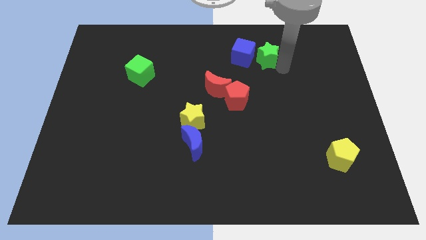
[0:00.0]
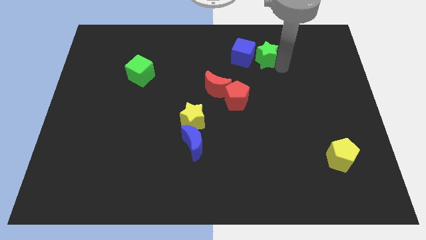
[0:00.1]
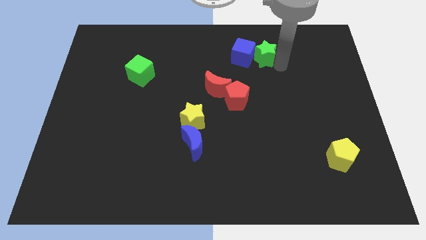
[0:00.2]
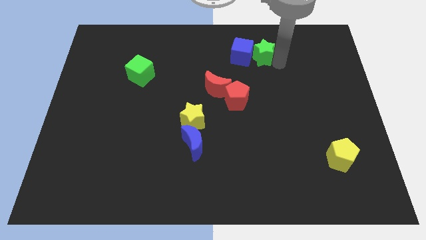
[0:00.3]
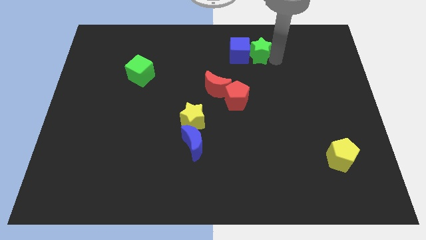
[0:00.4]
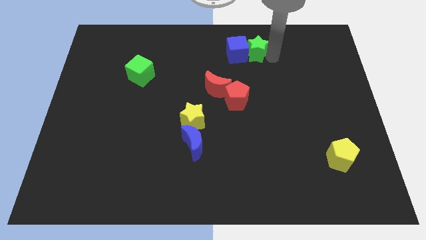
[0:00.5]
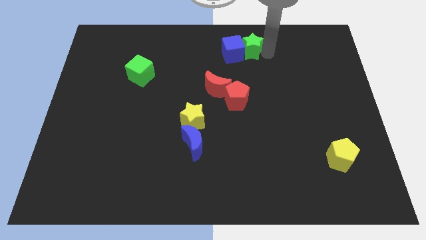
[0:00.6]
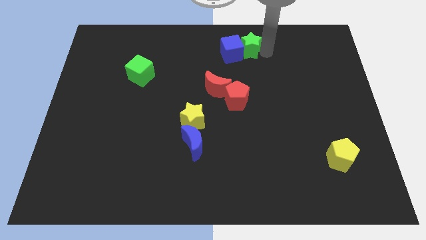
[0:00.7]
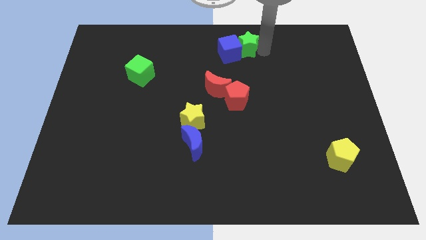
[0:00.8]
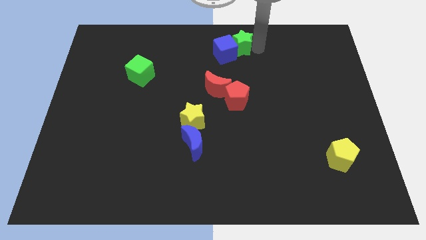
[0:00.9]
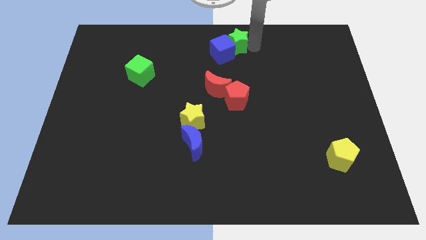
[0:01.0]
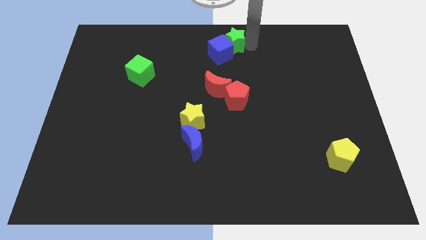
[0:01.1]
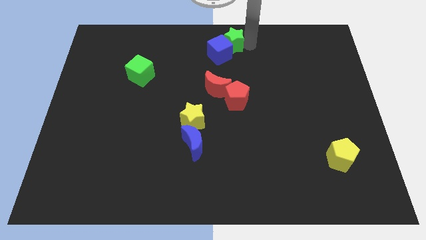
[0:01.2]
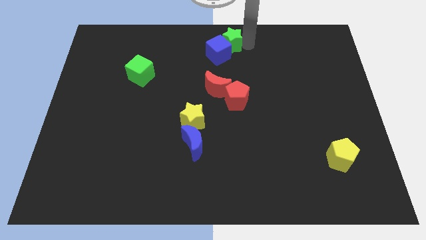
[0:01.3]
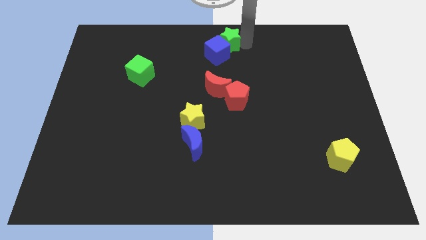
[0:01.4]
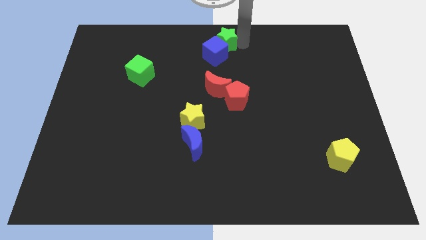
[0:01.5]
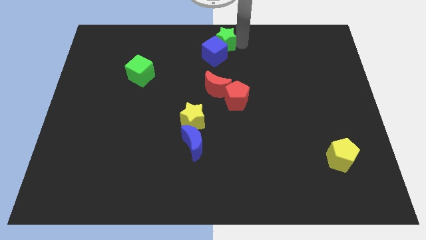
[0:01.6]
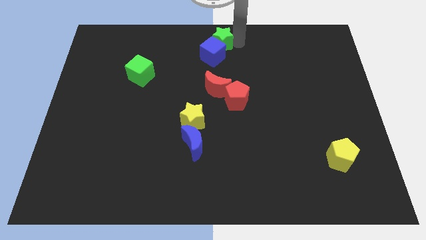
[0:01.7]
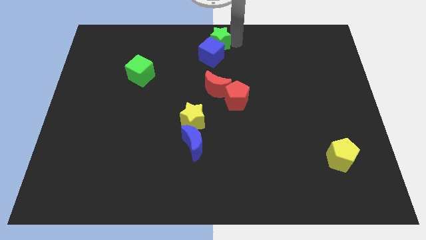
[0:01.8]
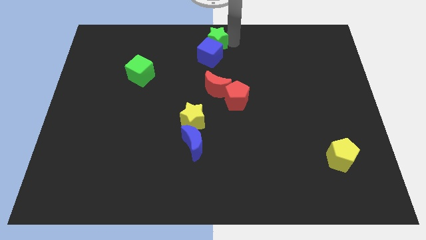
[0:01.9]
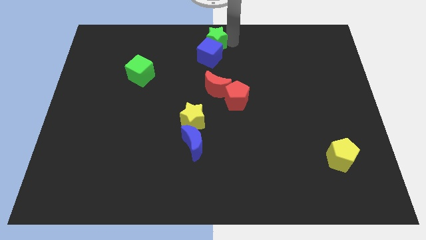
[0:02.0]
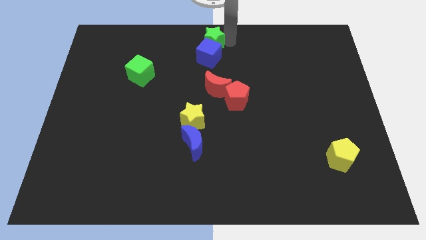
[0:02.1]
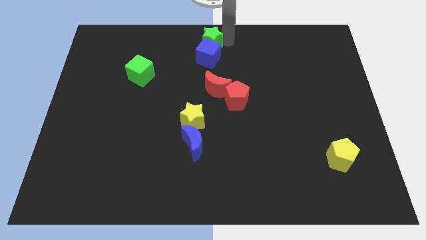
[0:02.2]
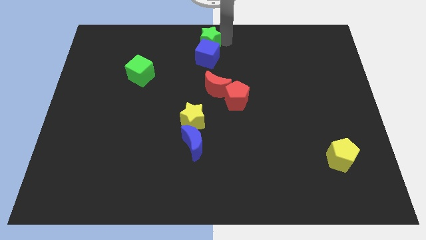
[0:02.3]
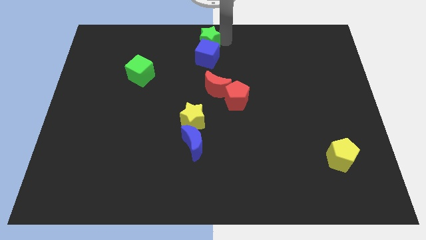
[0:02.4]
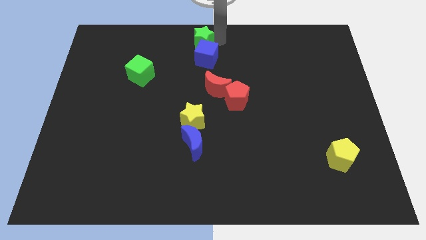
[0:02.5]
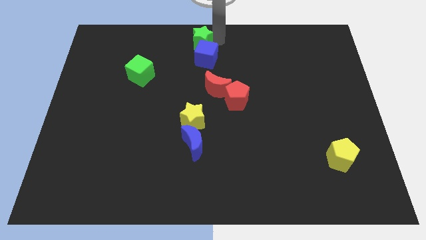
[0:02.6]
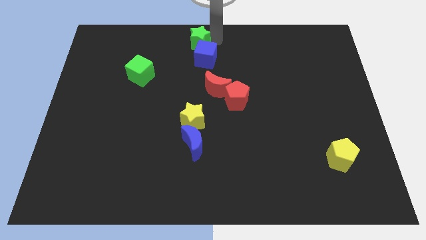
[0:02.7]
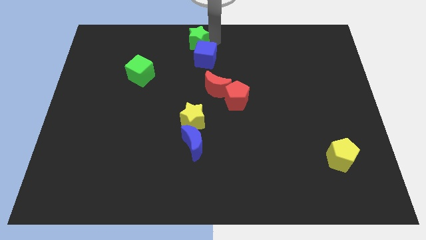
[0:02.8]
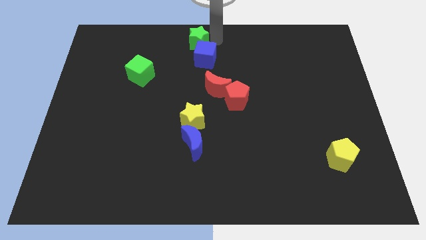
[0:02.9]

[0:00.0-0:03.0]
move green star above blue cube

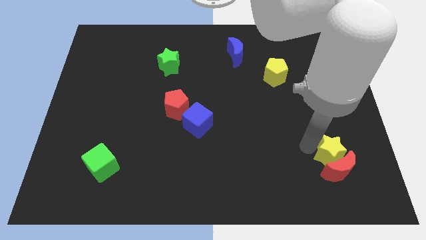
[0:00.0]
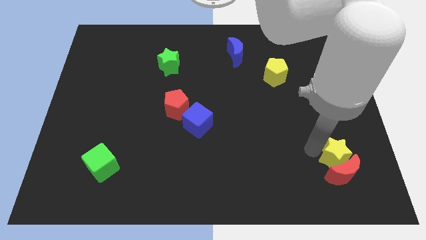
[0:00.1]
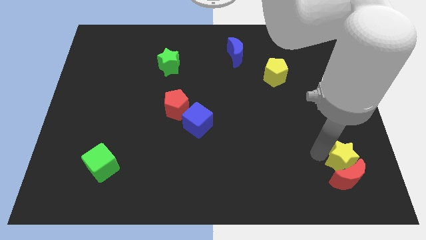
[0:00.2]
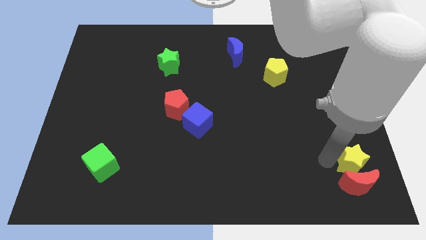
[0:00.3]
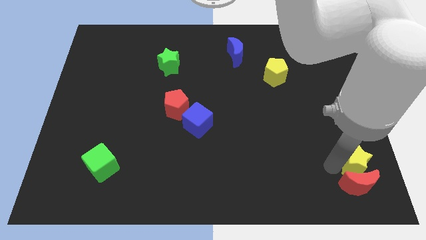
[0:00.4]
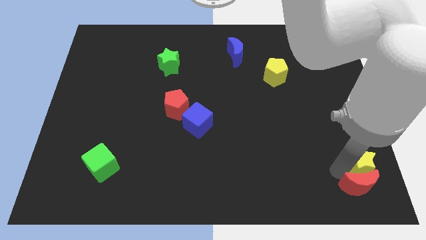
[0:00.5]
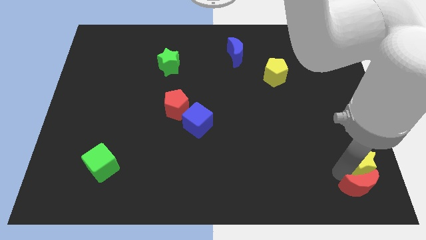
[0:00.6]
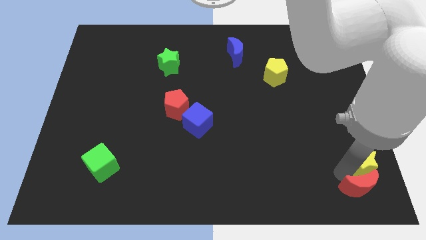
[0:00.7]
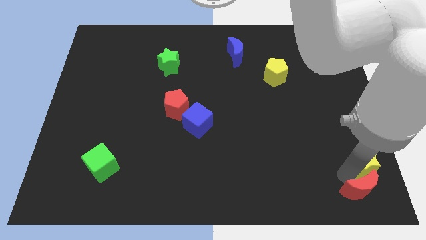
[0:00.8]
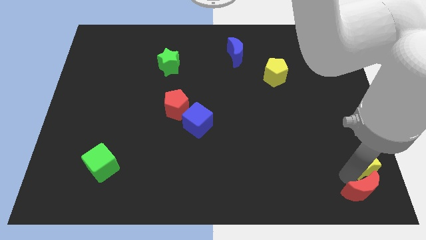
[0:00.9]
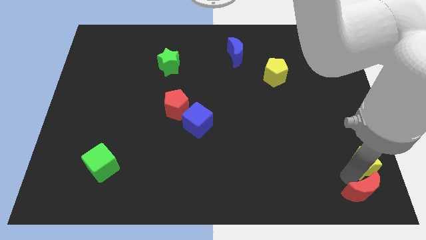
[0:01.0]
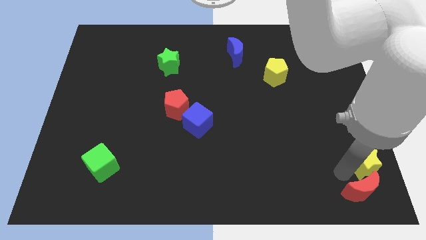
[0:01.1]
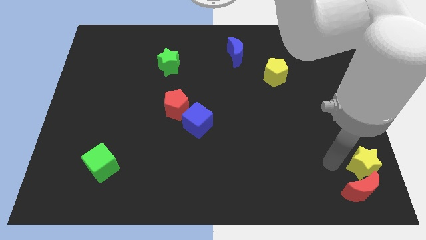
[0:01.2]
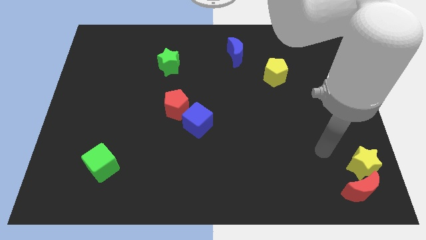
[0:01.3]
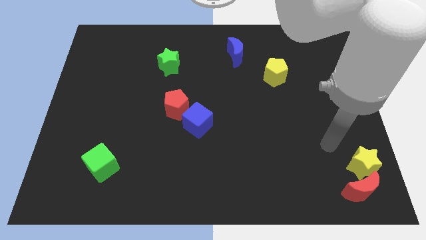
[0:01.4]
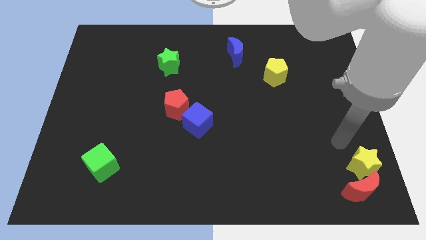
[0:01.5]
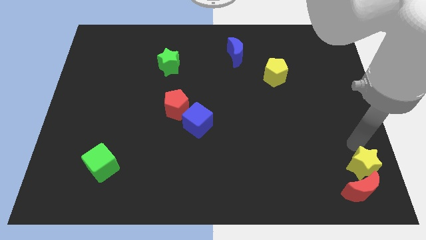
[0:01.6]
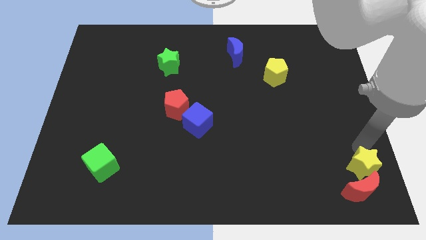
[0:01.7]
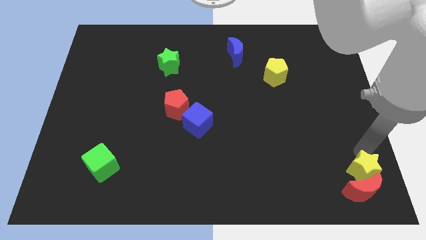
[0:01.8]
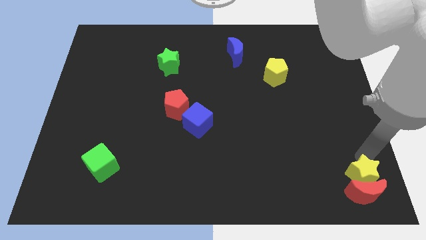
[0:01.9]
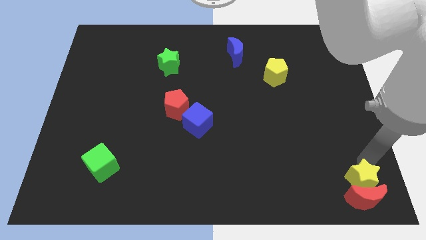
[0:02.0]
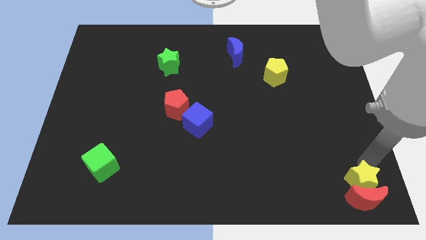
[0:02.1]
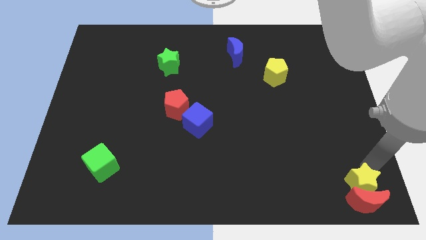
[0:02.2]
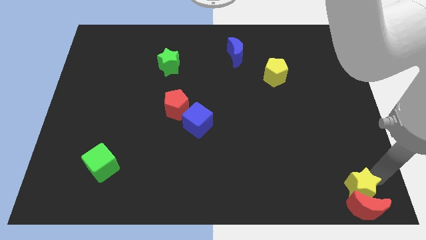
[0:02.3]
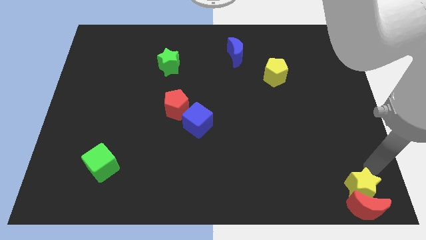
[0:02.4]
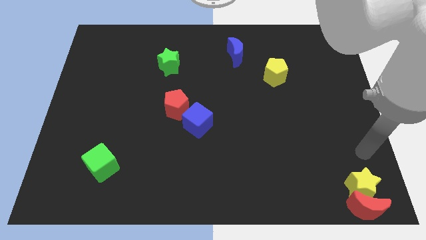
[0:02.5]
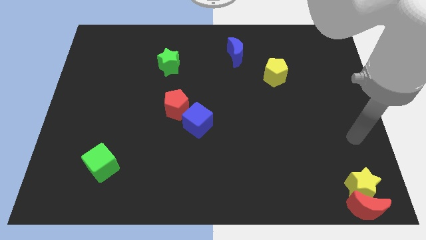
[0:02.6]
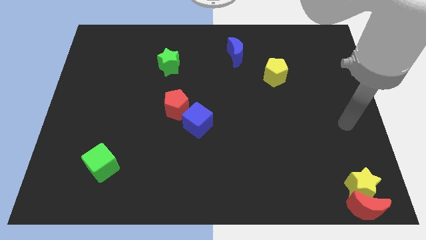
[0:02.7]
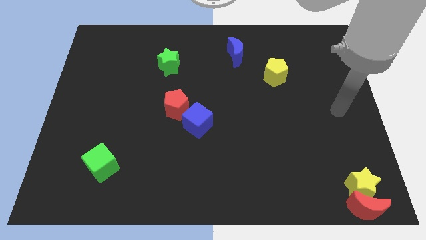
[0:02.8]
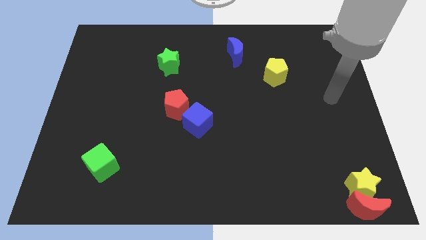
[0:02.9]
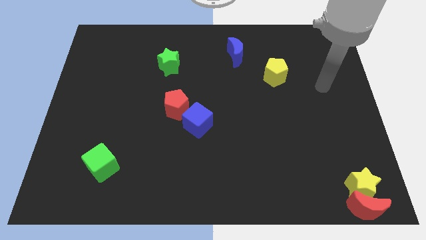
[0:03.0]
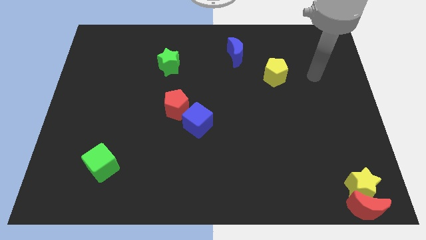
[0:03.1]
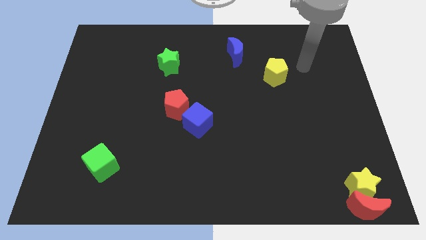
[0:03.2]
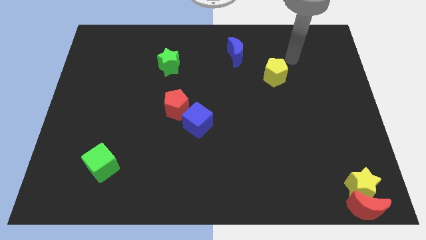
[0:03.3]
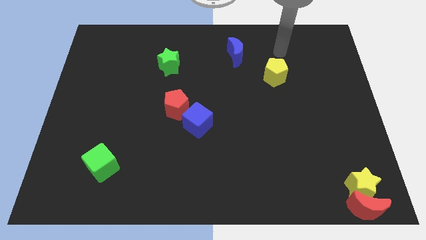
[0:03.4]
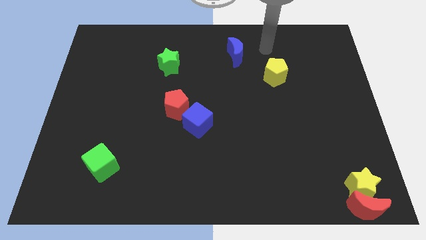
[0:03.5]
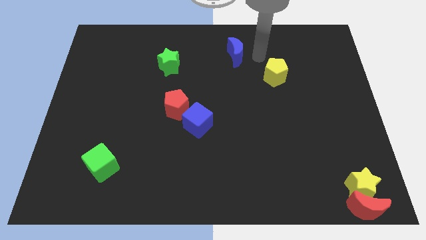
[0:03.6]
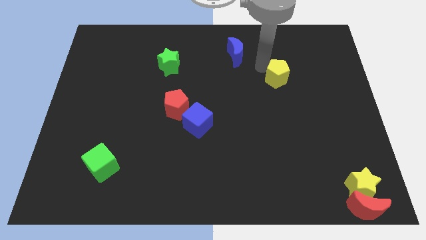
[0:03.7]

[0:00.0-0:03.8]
place your arm in between the blue crescent and the yellow pentagon

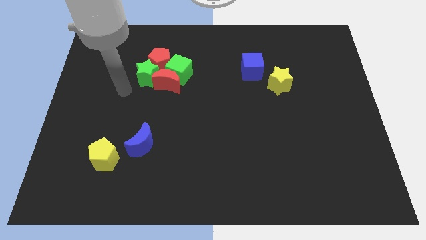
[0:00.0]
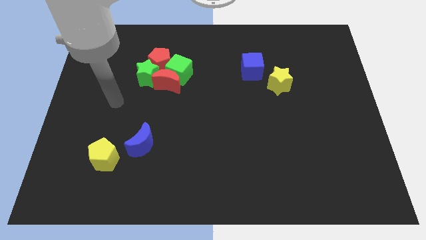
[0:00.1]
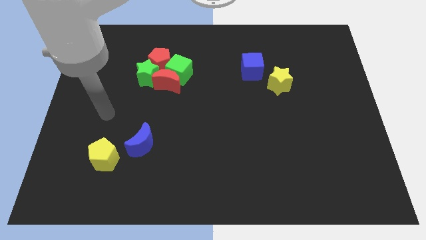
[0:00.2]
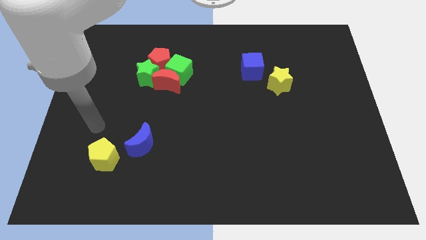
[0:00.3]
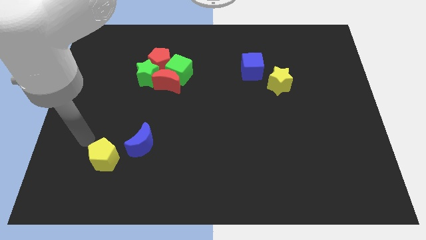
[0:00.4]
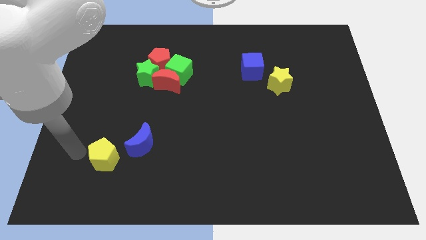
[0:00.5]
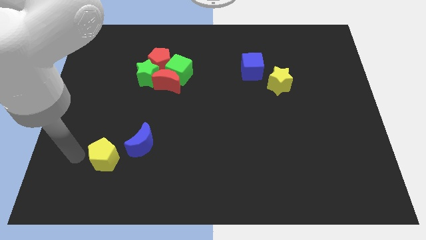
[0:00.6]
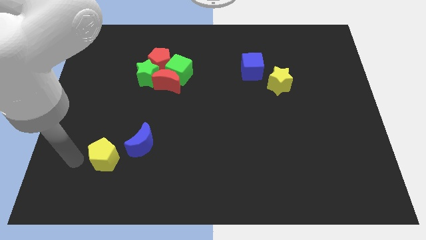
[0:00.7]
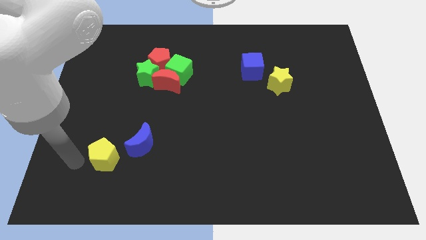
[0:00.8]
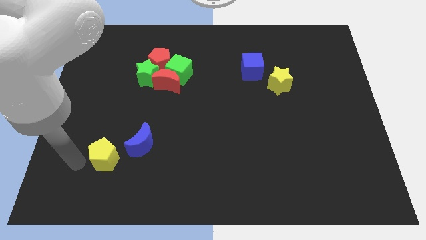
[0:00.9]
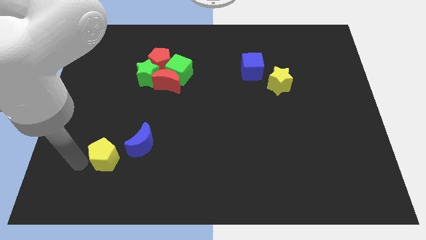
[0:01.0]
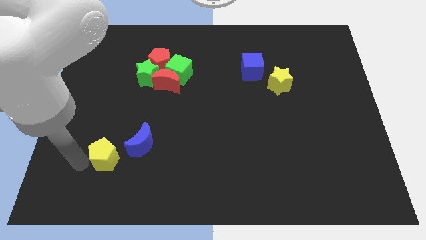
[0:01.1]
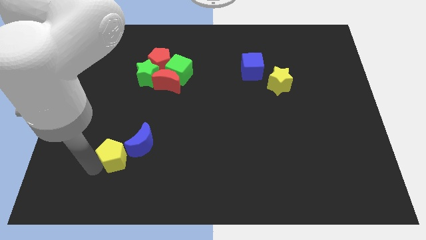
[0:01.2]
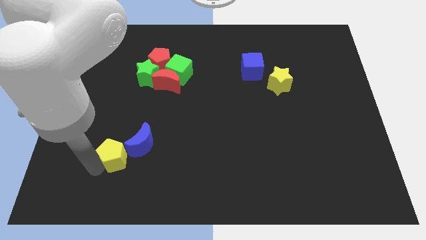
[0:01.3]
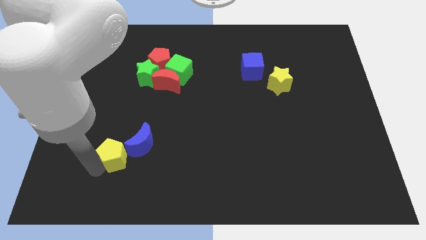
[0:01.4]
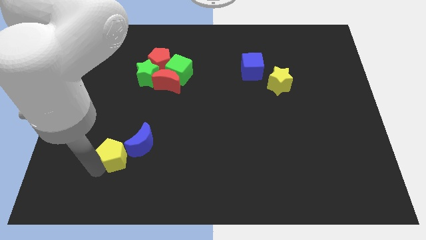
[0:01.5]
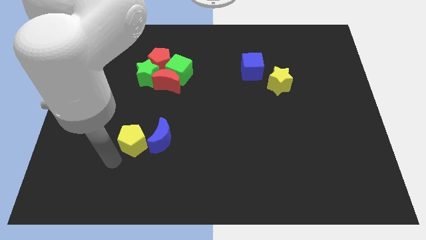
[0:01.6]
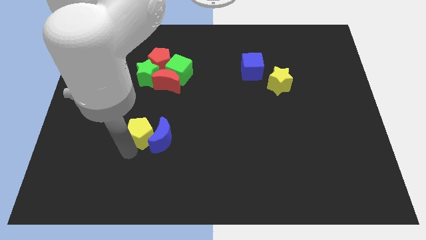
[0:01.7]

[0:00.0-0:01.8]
push the yellow pentagon into the blue moon

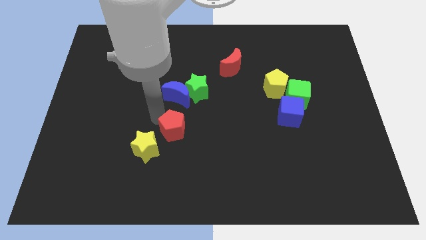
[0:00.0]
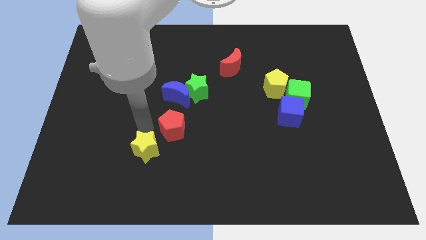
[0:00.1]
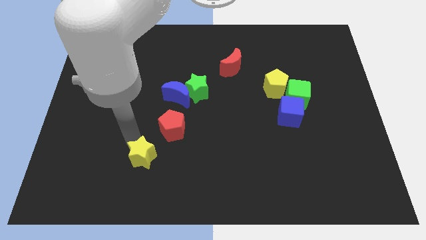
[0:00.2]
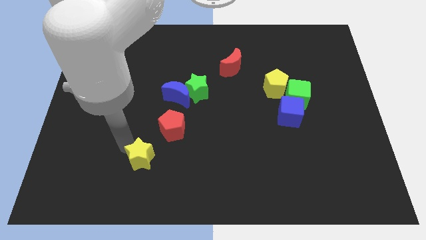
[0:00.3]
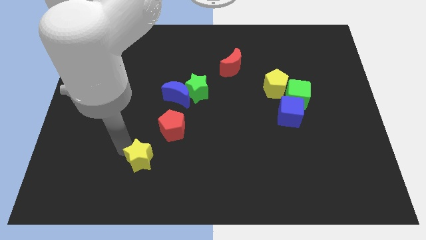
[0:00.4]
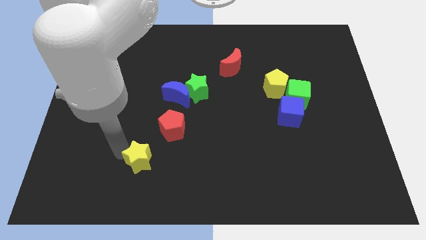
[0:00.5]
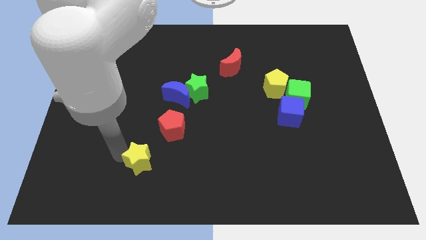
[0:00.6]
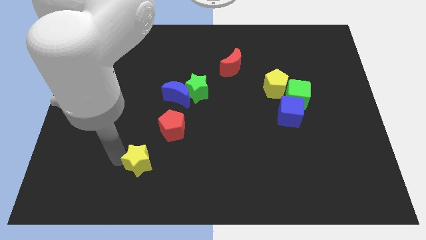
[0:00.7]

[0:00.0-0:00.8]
move yellow star downwards
